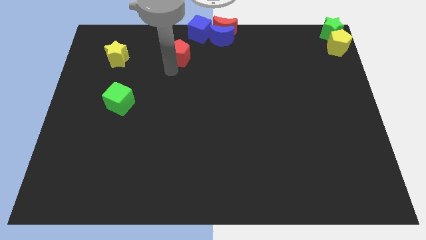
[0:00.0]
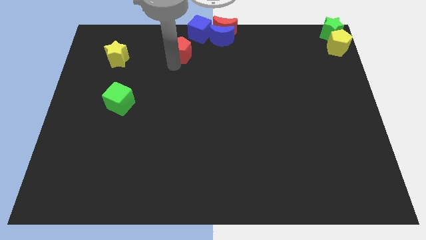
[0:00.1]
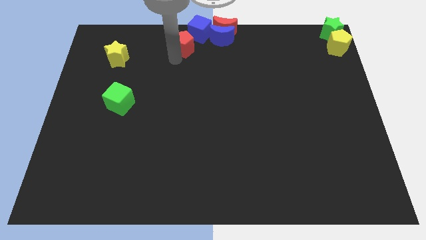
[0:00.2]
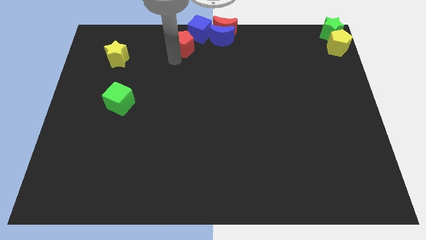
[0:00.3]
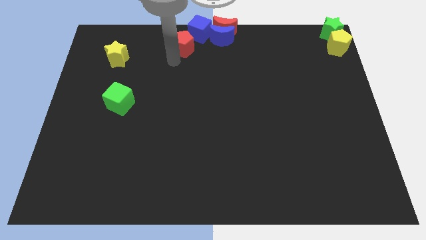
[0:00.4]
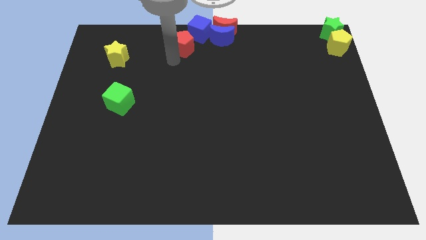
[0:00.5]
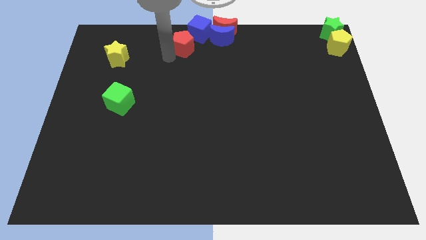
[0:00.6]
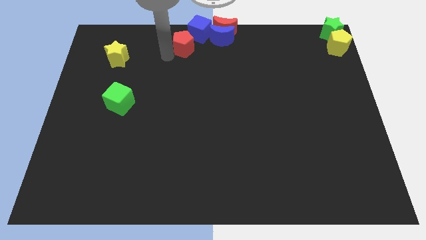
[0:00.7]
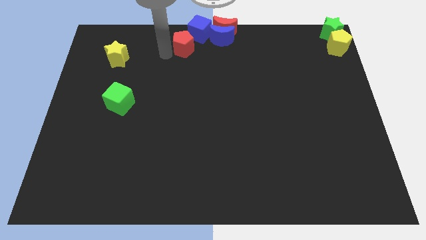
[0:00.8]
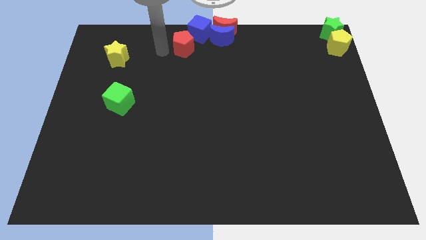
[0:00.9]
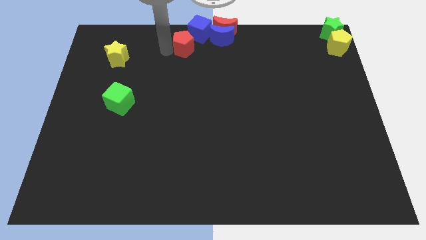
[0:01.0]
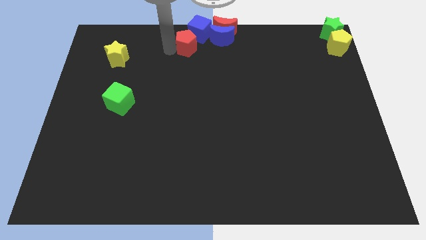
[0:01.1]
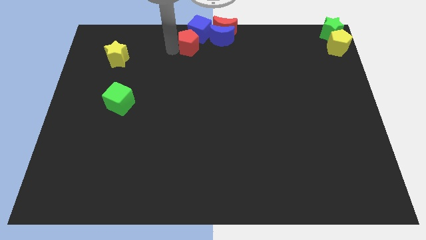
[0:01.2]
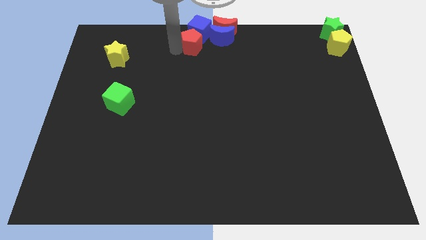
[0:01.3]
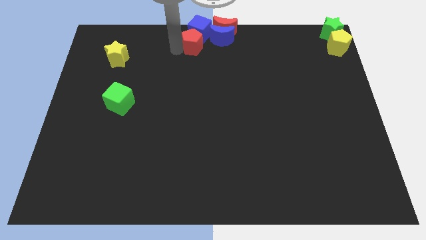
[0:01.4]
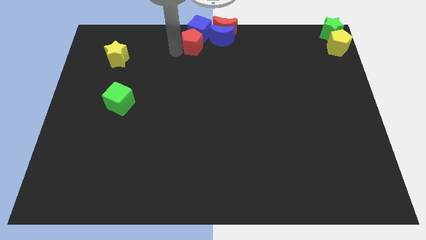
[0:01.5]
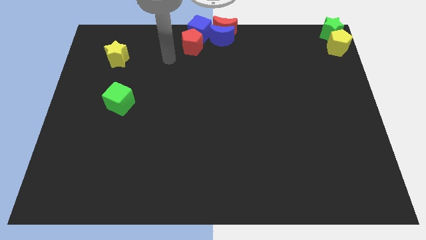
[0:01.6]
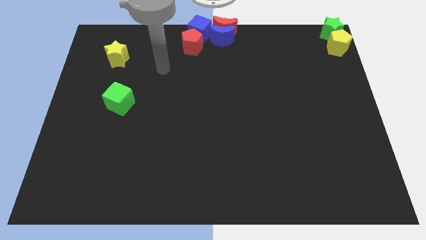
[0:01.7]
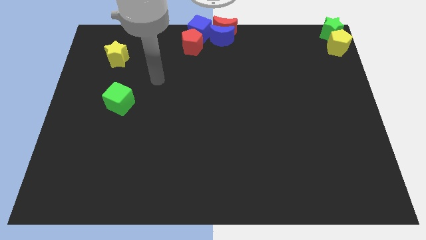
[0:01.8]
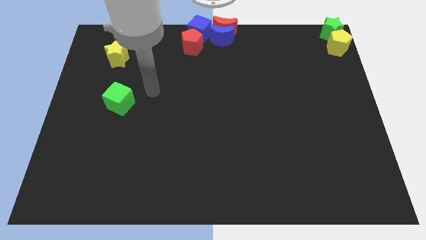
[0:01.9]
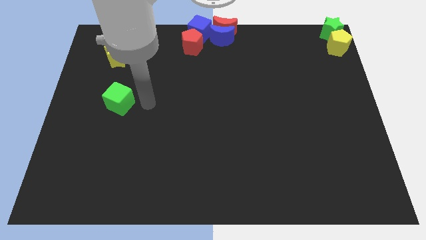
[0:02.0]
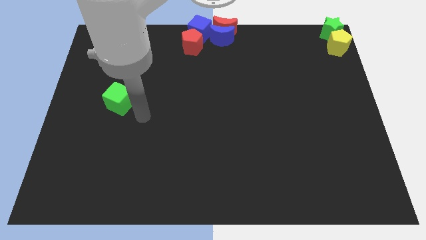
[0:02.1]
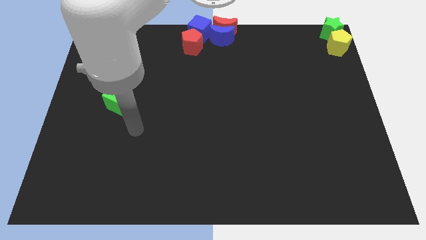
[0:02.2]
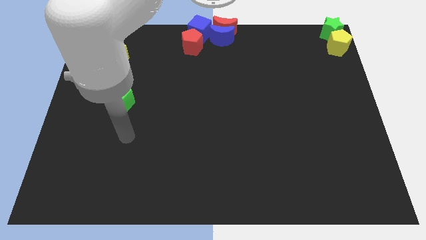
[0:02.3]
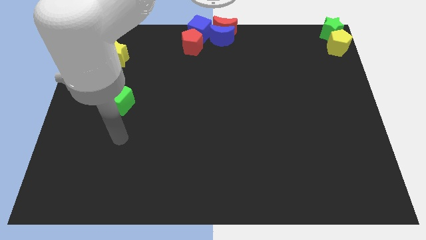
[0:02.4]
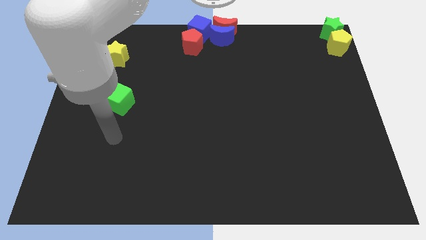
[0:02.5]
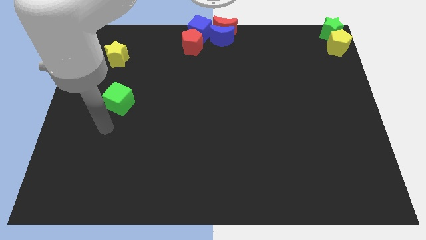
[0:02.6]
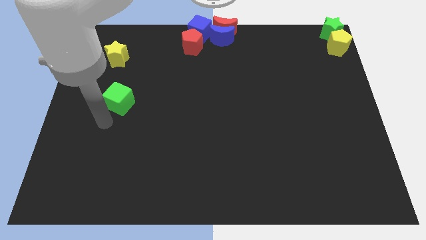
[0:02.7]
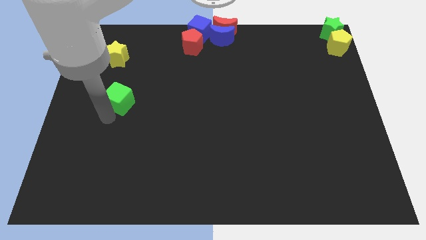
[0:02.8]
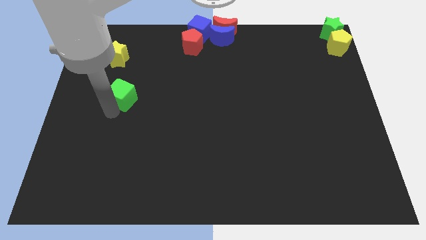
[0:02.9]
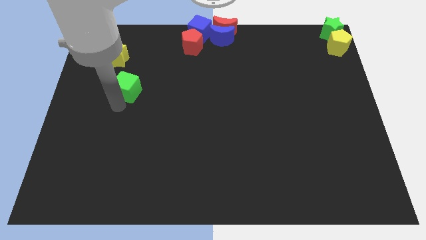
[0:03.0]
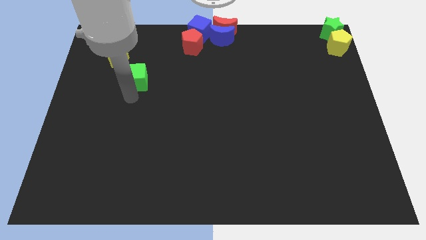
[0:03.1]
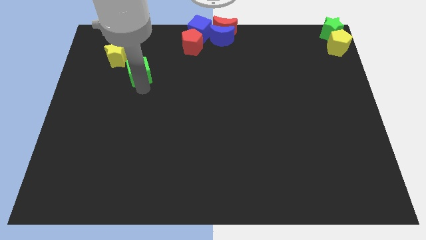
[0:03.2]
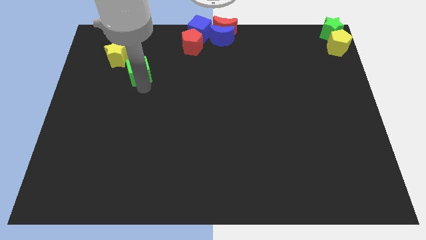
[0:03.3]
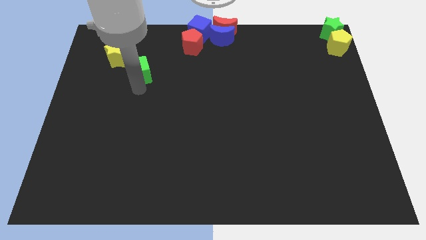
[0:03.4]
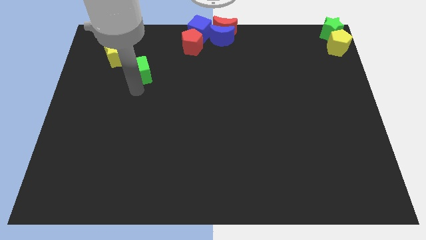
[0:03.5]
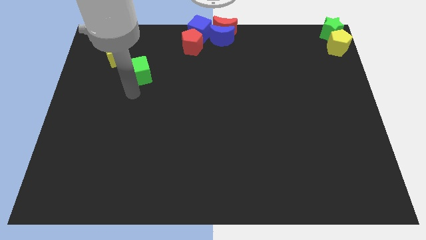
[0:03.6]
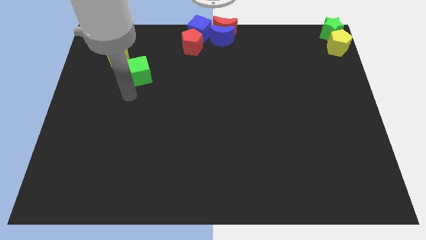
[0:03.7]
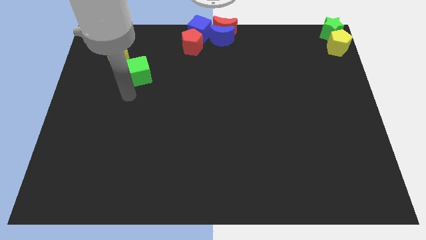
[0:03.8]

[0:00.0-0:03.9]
place the red pentagon below the blue cube

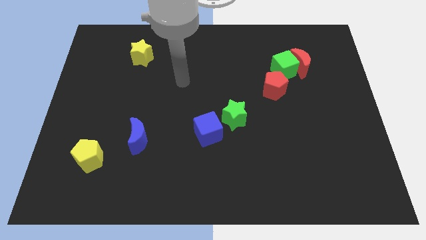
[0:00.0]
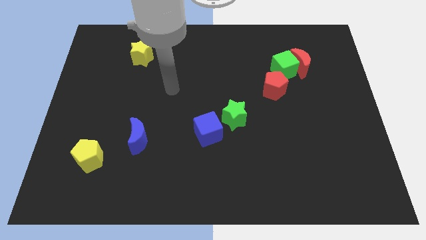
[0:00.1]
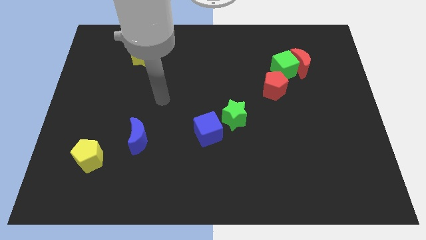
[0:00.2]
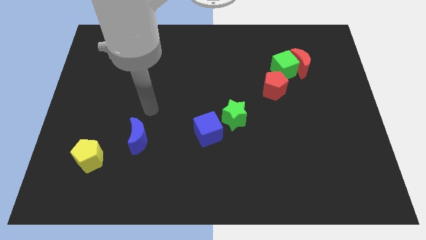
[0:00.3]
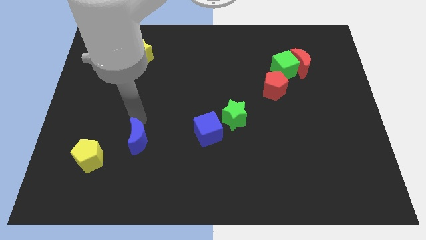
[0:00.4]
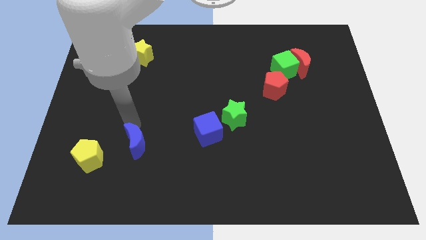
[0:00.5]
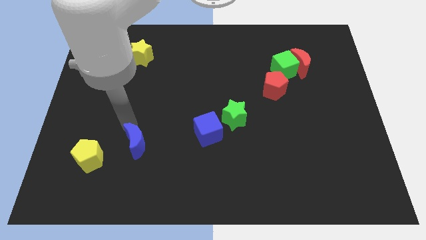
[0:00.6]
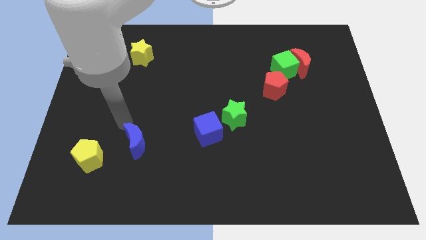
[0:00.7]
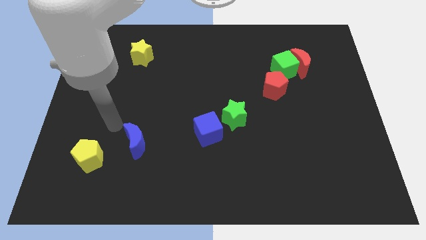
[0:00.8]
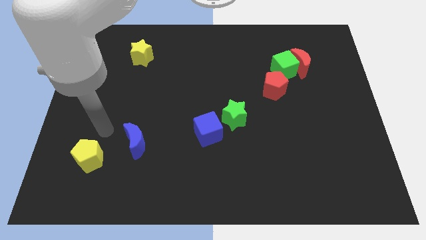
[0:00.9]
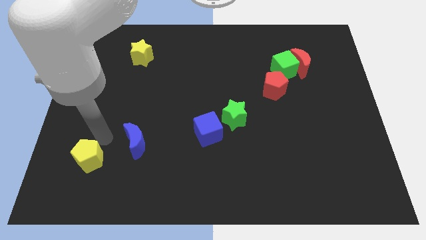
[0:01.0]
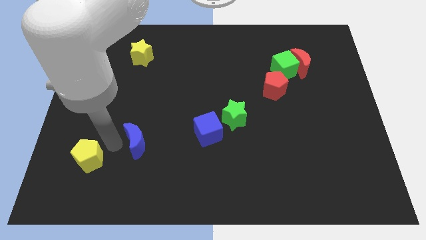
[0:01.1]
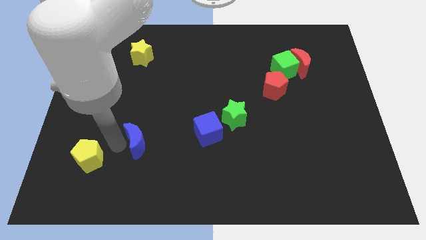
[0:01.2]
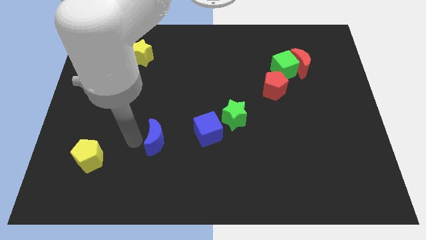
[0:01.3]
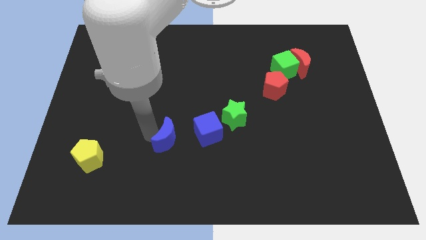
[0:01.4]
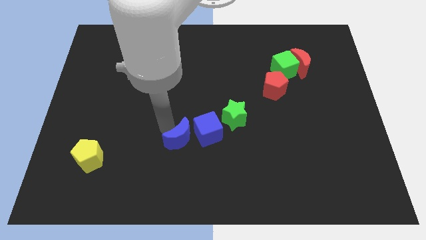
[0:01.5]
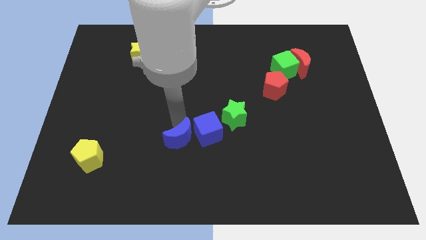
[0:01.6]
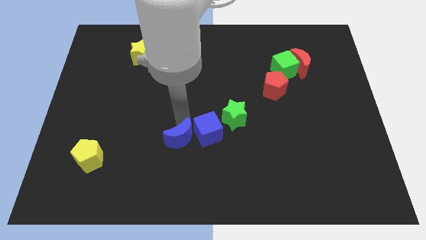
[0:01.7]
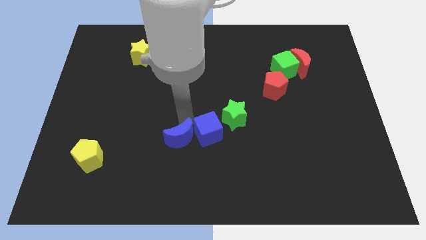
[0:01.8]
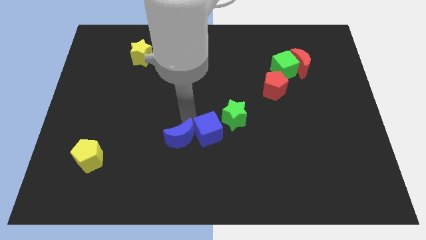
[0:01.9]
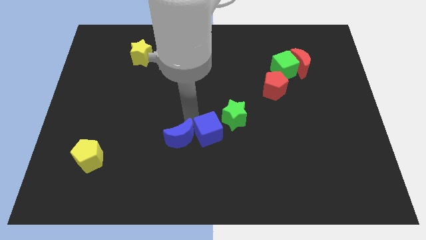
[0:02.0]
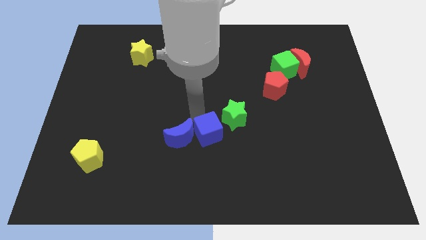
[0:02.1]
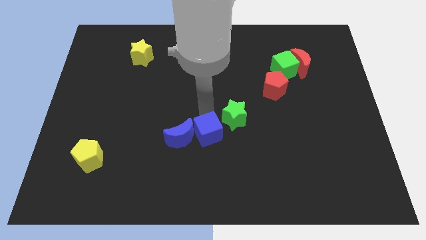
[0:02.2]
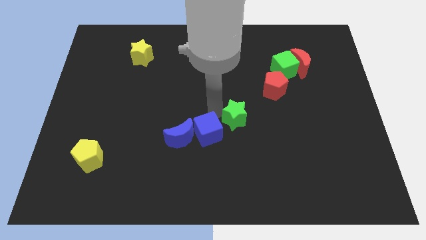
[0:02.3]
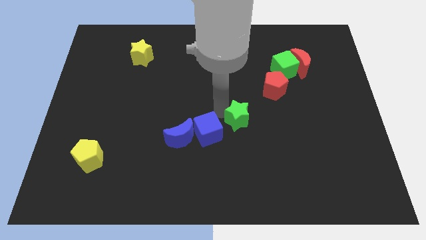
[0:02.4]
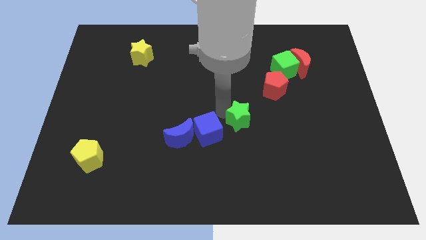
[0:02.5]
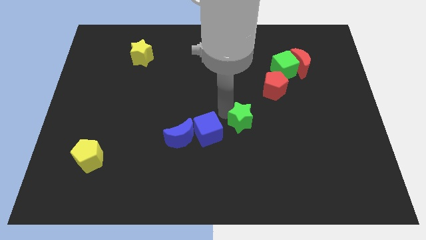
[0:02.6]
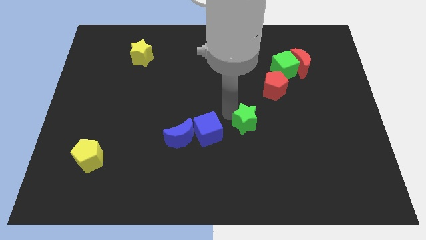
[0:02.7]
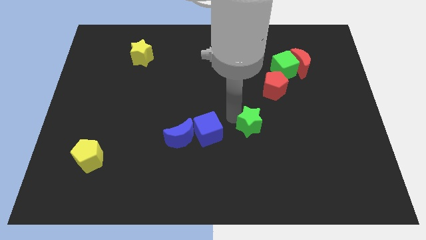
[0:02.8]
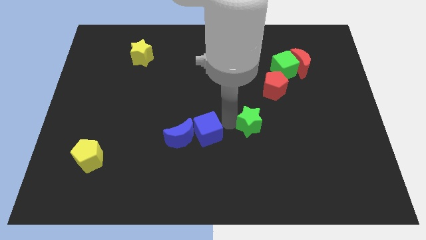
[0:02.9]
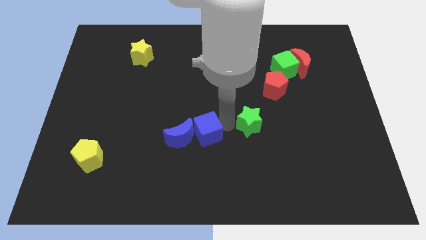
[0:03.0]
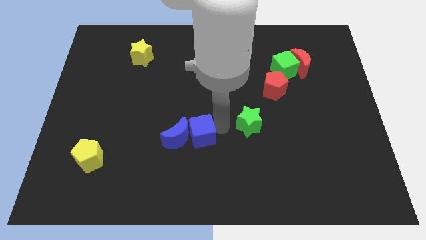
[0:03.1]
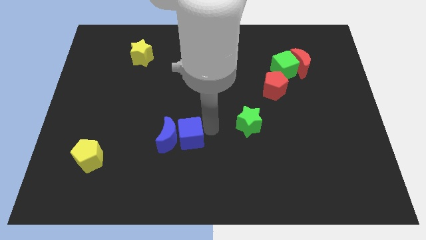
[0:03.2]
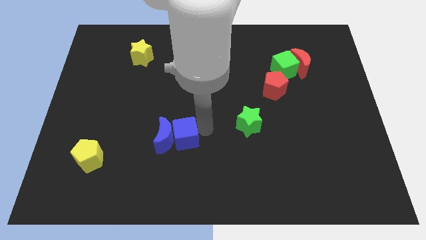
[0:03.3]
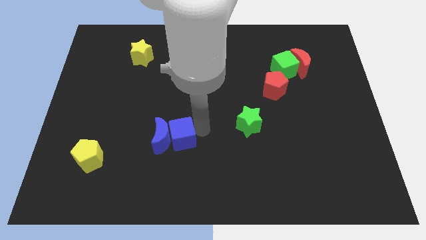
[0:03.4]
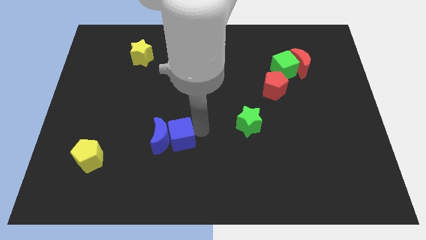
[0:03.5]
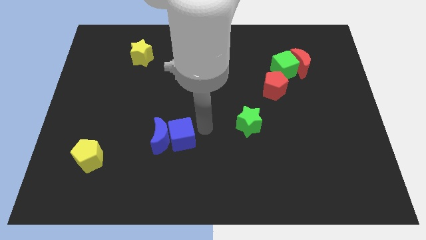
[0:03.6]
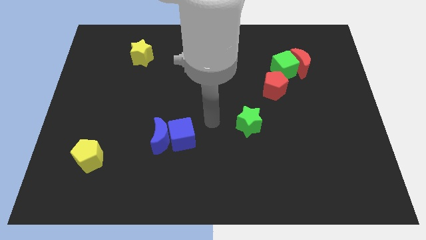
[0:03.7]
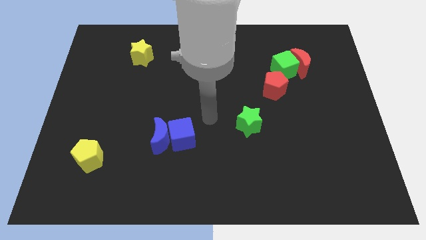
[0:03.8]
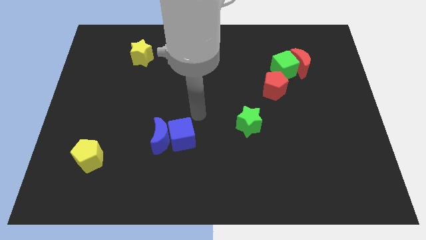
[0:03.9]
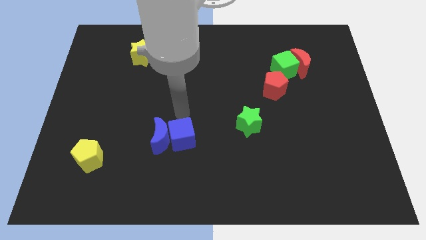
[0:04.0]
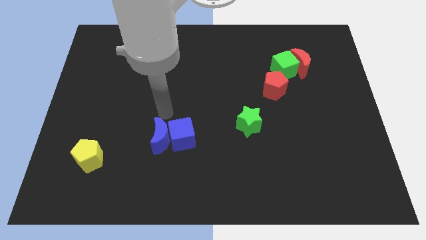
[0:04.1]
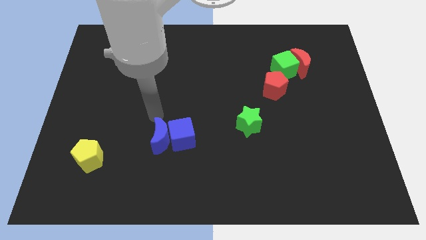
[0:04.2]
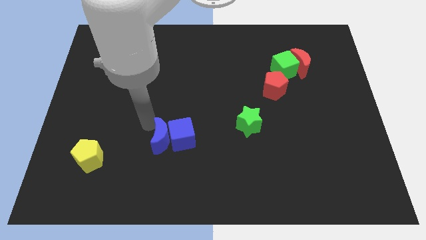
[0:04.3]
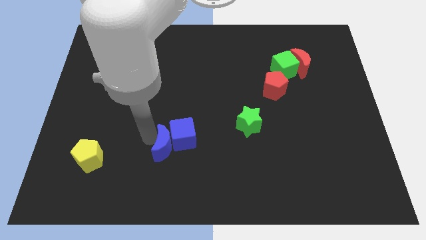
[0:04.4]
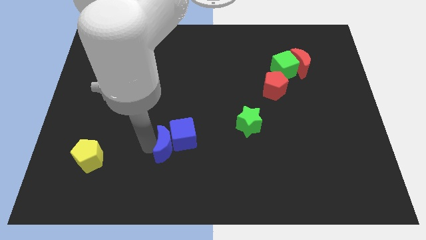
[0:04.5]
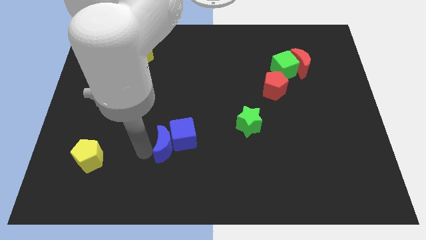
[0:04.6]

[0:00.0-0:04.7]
move the blue crescent into the blue cube

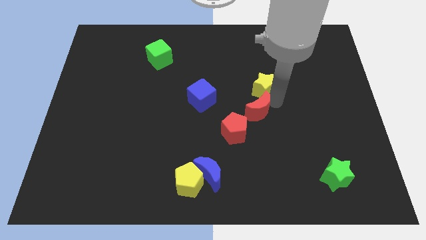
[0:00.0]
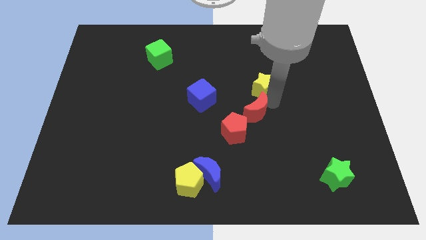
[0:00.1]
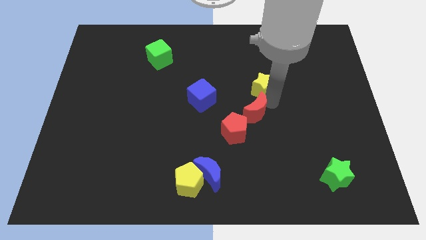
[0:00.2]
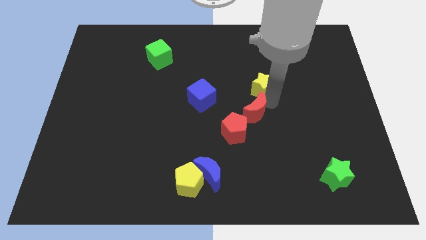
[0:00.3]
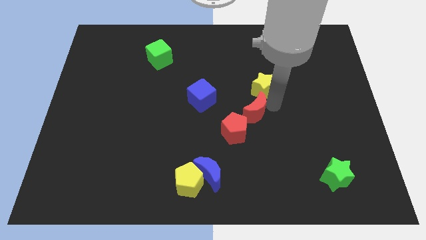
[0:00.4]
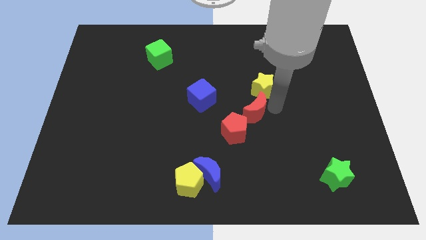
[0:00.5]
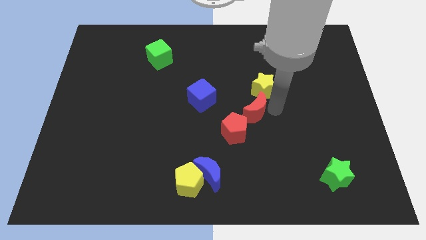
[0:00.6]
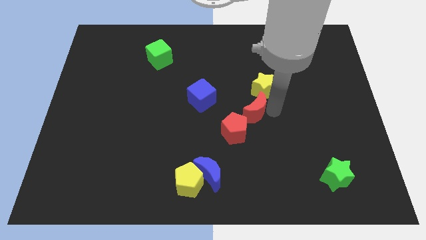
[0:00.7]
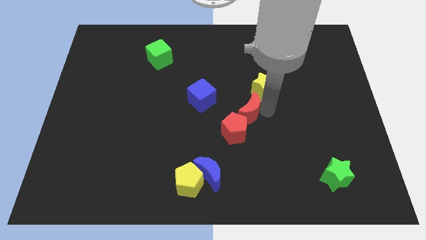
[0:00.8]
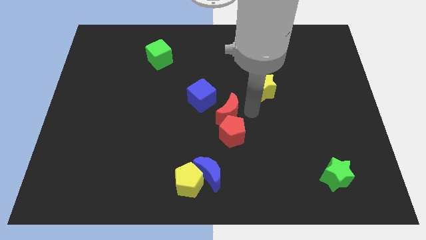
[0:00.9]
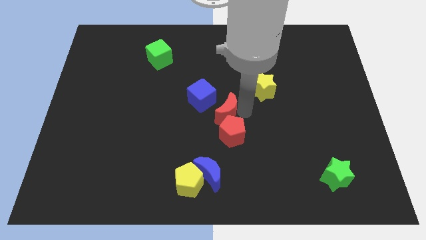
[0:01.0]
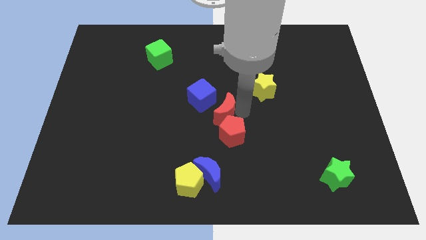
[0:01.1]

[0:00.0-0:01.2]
place the red crescent above the red pentagon
